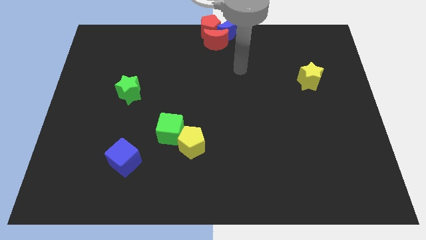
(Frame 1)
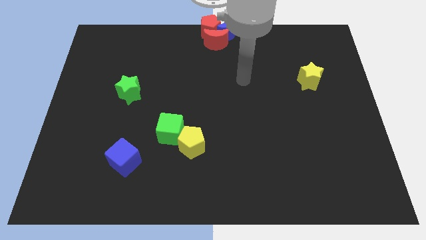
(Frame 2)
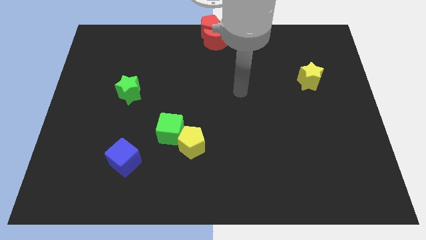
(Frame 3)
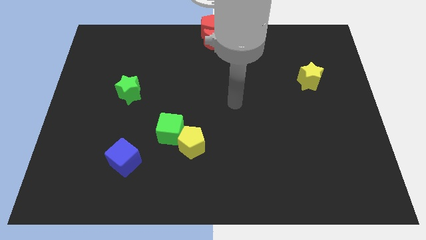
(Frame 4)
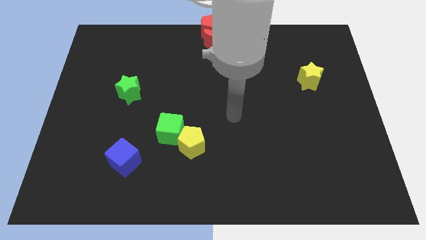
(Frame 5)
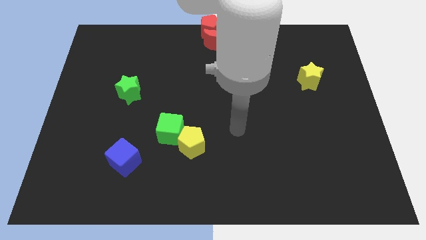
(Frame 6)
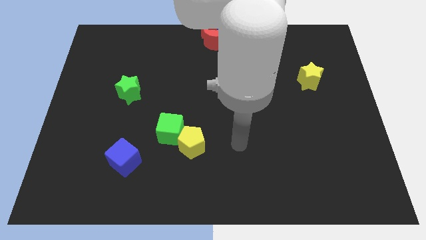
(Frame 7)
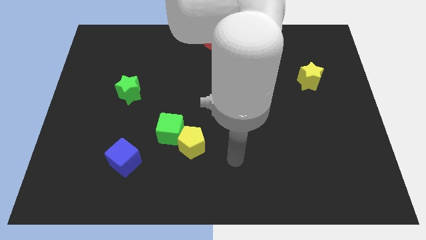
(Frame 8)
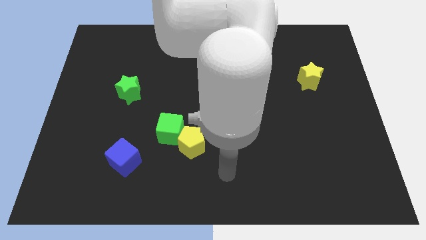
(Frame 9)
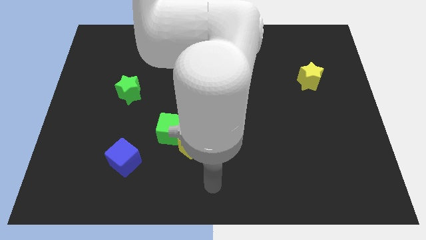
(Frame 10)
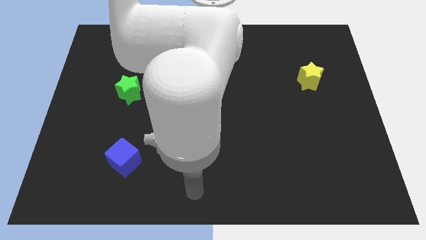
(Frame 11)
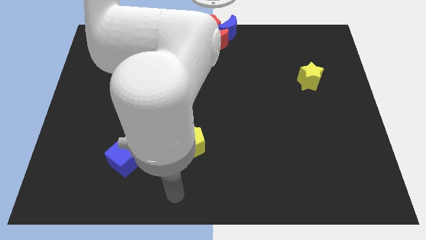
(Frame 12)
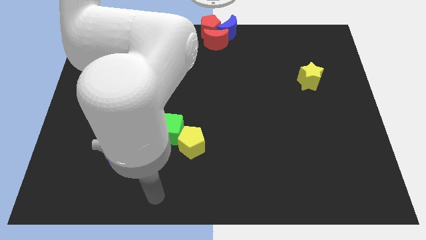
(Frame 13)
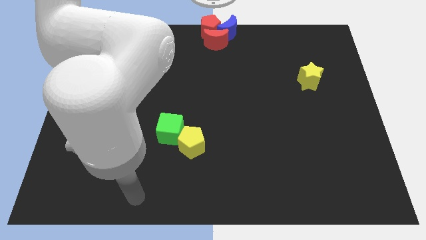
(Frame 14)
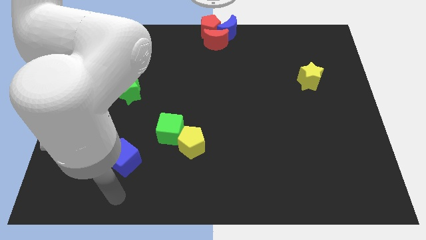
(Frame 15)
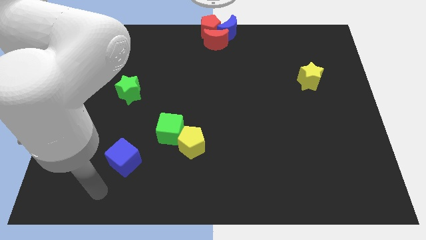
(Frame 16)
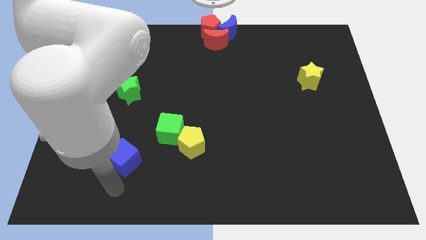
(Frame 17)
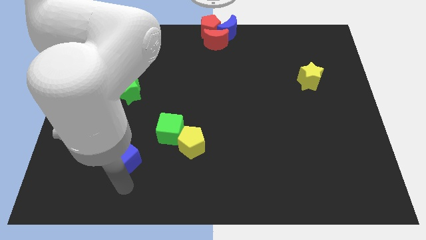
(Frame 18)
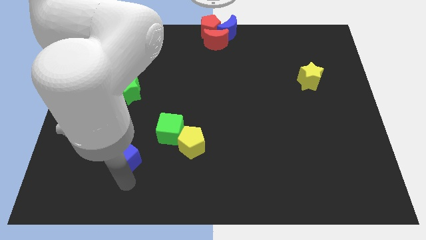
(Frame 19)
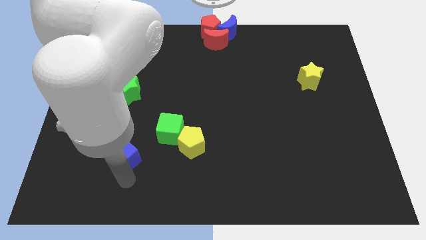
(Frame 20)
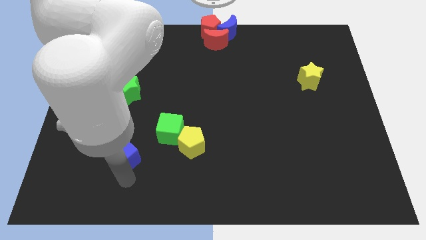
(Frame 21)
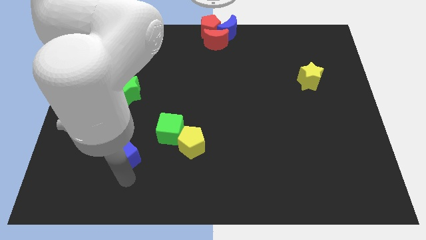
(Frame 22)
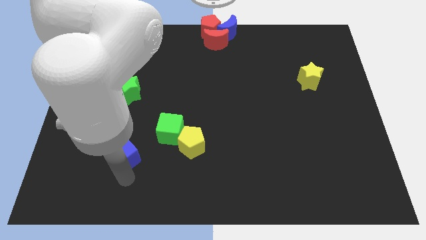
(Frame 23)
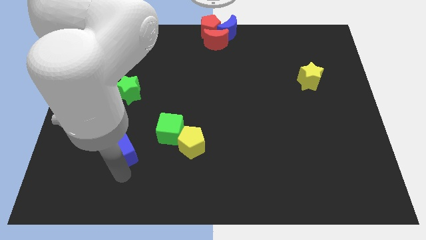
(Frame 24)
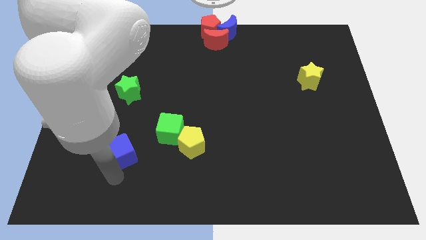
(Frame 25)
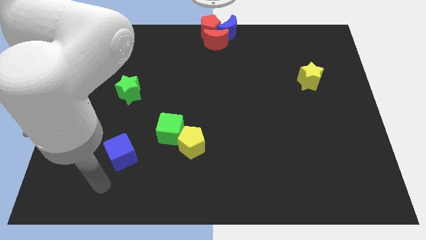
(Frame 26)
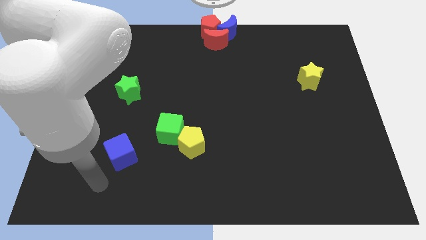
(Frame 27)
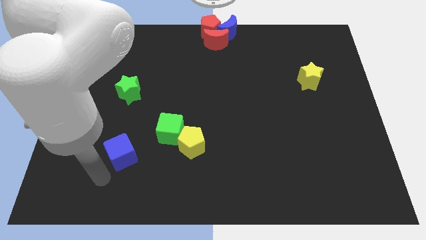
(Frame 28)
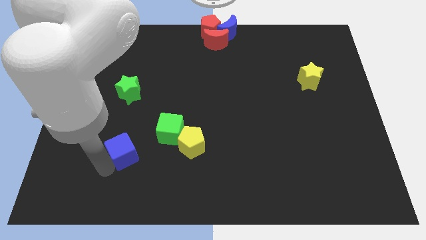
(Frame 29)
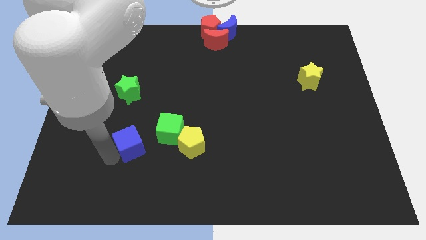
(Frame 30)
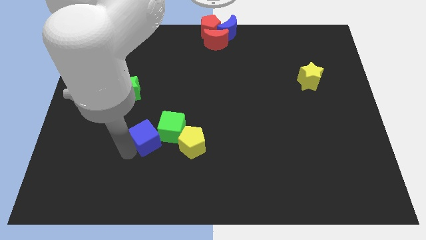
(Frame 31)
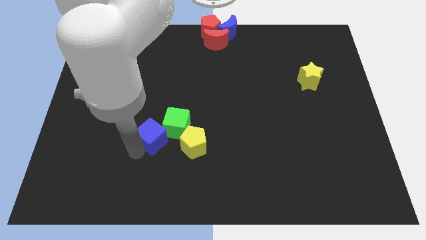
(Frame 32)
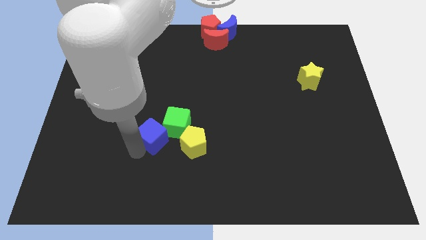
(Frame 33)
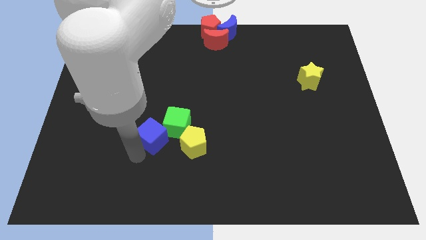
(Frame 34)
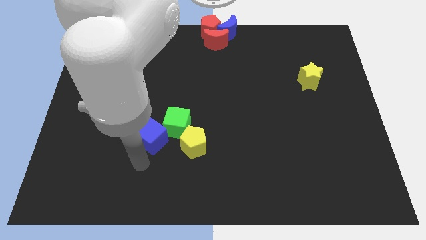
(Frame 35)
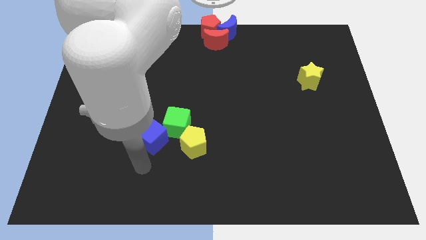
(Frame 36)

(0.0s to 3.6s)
move the blue cube into the green cube

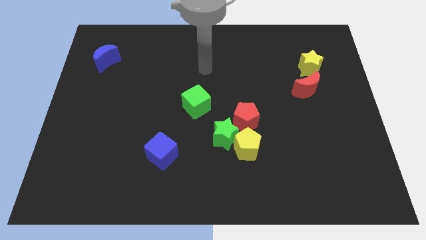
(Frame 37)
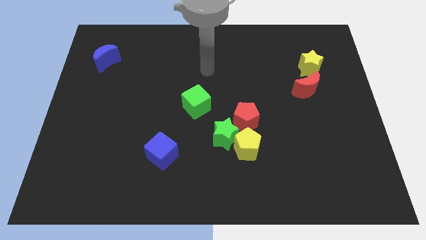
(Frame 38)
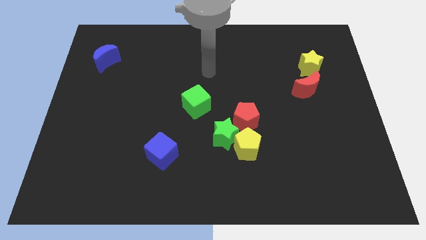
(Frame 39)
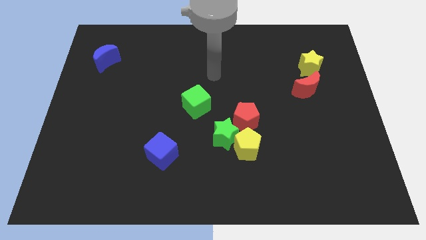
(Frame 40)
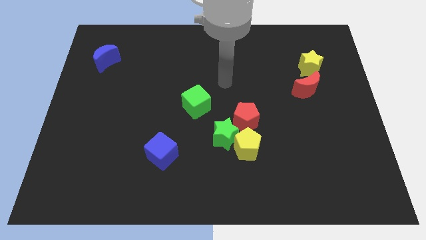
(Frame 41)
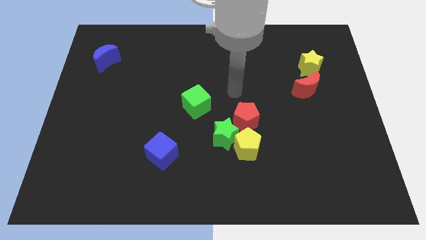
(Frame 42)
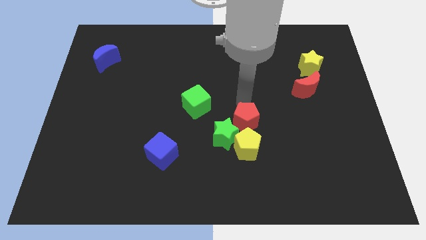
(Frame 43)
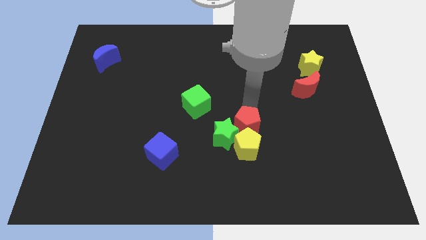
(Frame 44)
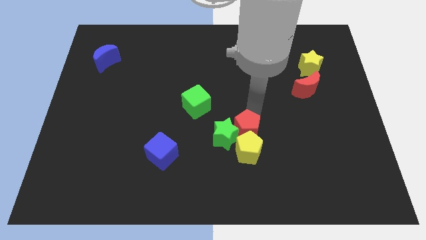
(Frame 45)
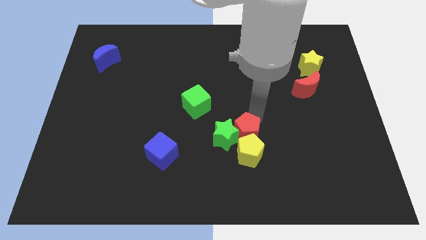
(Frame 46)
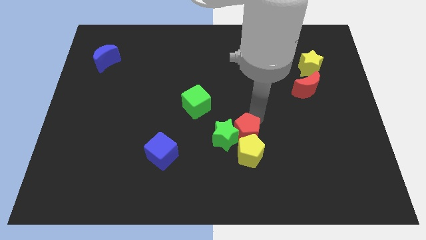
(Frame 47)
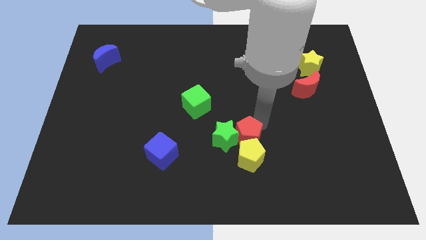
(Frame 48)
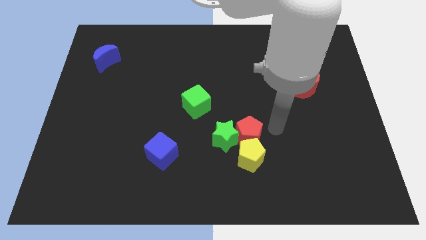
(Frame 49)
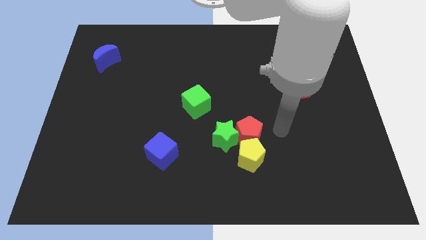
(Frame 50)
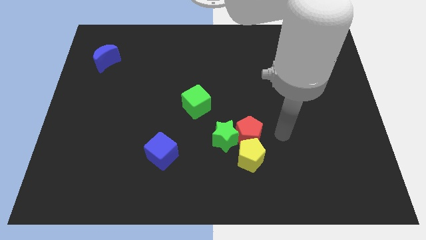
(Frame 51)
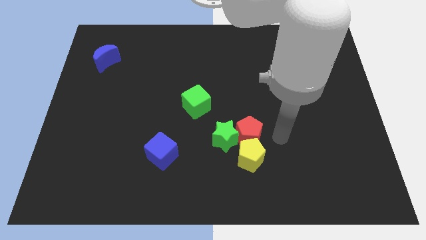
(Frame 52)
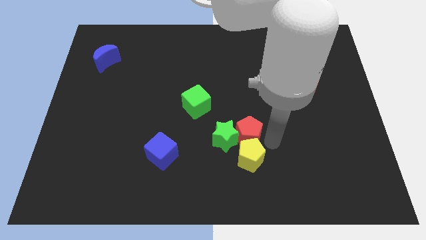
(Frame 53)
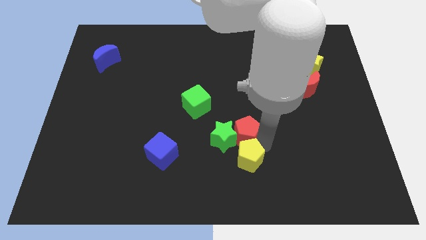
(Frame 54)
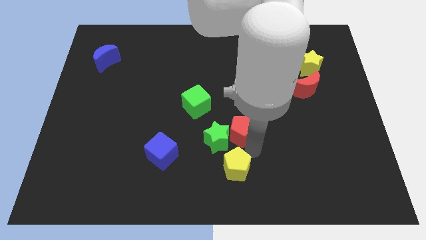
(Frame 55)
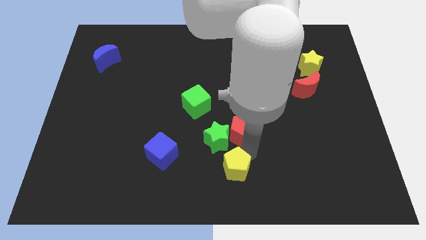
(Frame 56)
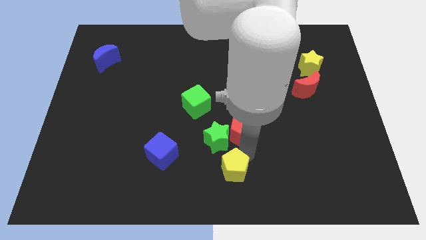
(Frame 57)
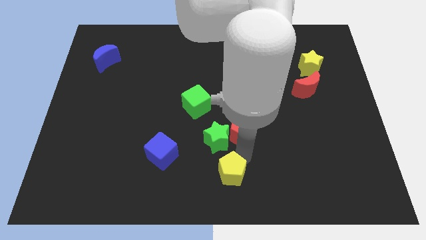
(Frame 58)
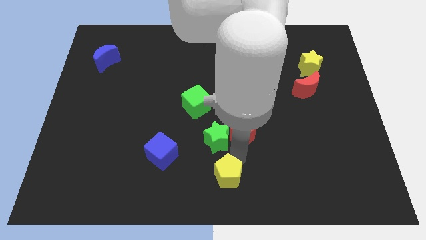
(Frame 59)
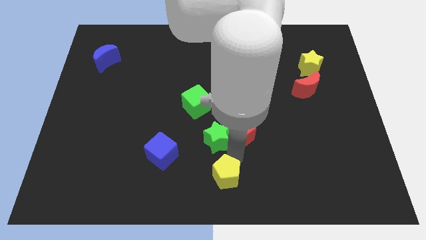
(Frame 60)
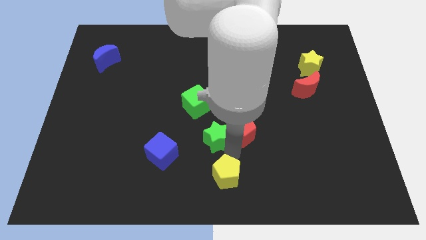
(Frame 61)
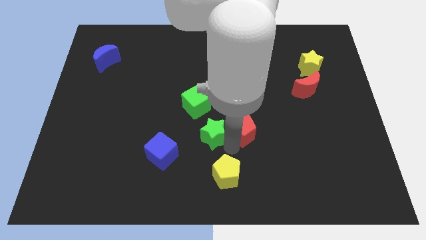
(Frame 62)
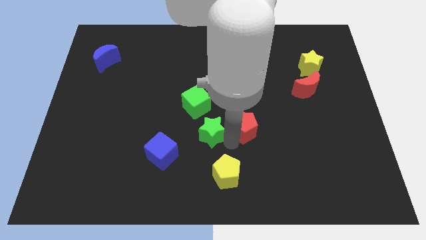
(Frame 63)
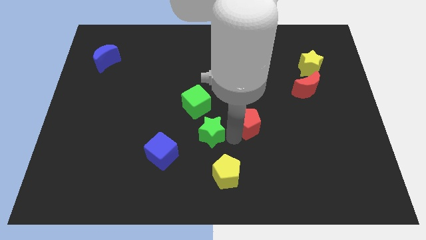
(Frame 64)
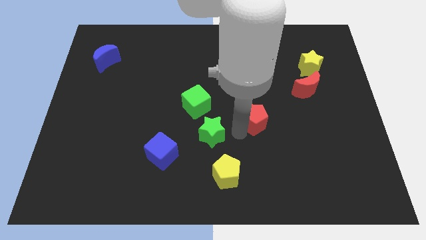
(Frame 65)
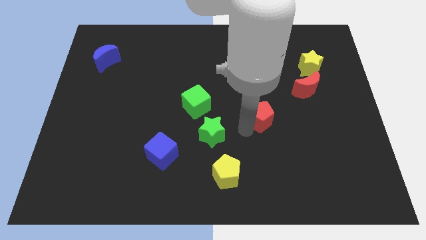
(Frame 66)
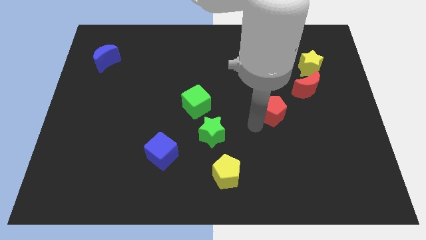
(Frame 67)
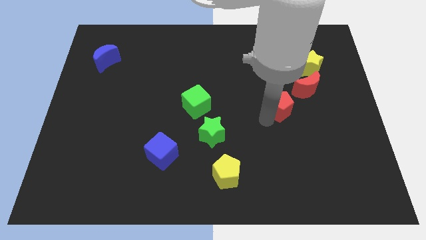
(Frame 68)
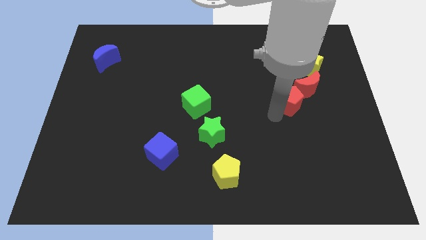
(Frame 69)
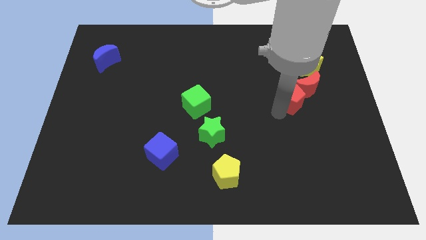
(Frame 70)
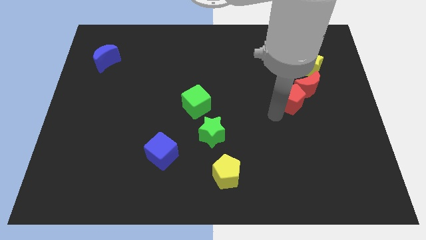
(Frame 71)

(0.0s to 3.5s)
move the red pentagon below the red crescent

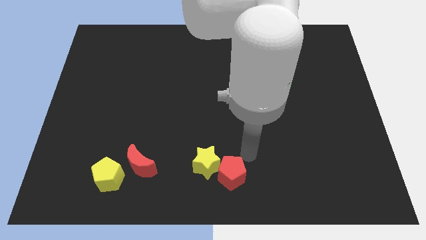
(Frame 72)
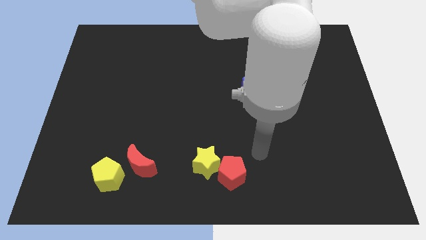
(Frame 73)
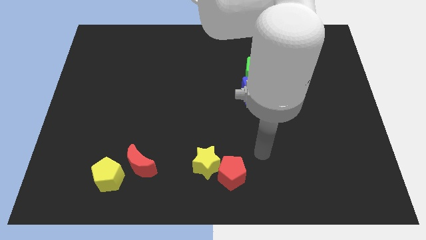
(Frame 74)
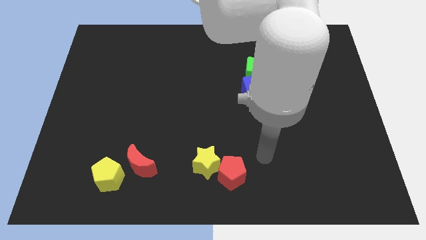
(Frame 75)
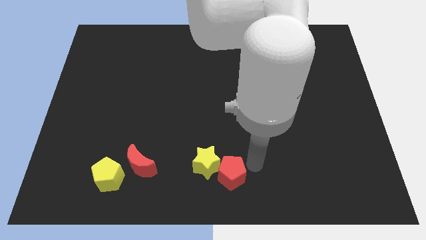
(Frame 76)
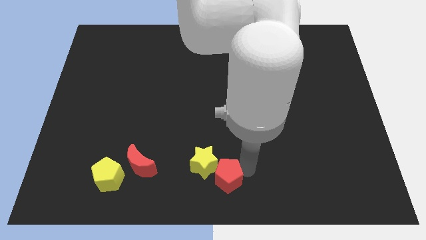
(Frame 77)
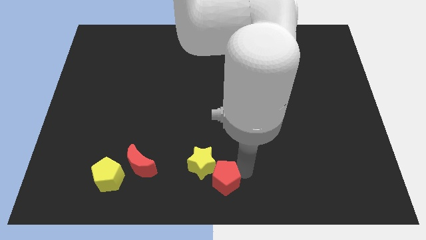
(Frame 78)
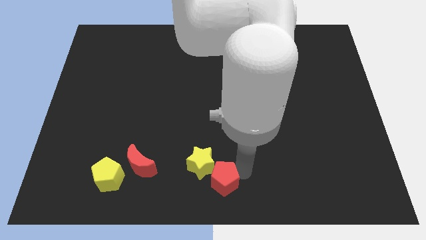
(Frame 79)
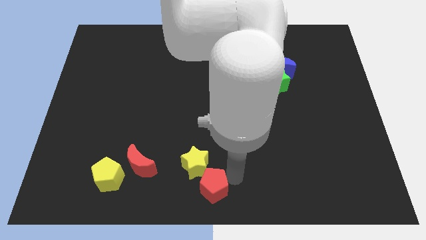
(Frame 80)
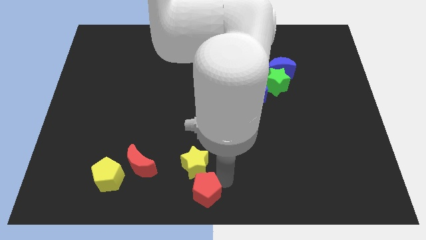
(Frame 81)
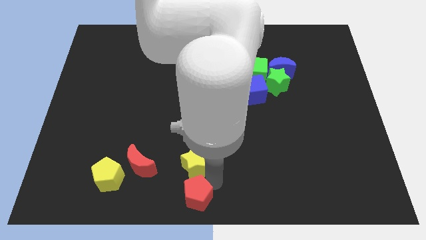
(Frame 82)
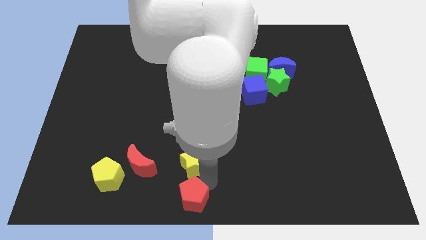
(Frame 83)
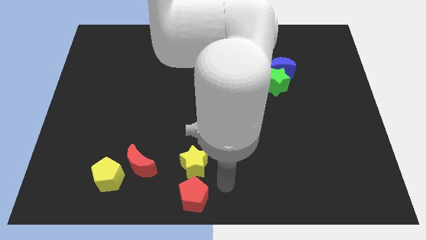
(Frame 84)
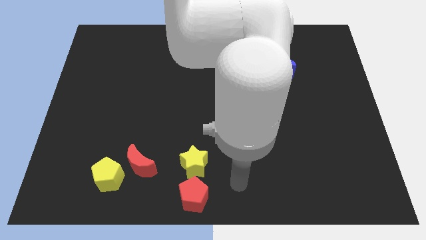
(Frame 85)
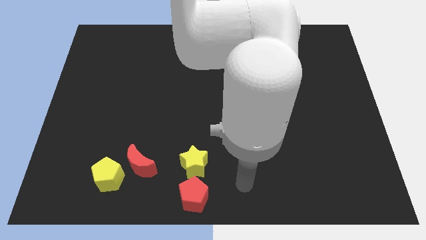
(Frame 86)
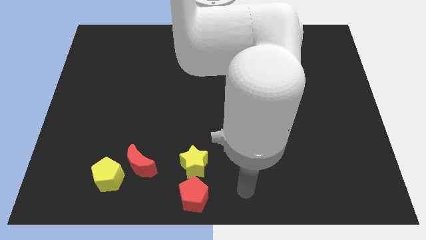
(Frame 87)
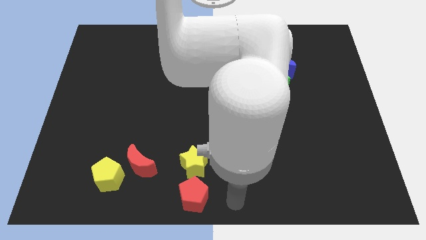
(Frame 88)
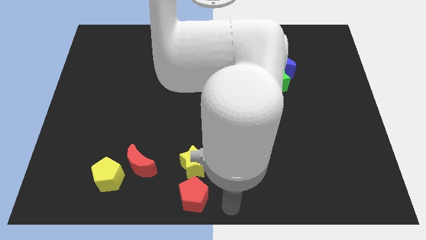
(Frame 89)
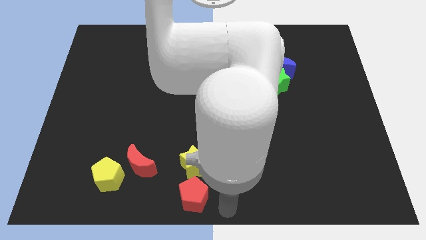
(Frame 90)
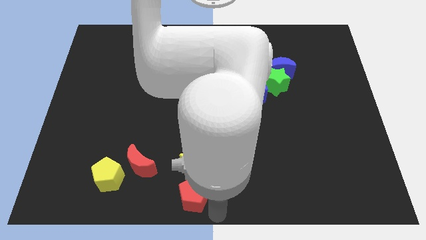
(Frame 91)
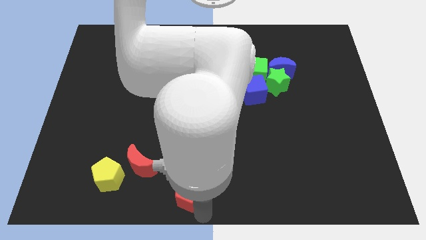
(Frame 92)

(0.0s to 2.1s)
slide red pentagon to the bottom center
